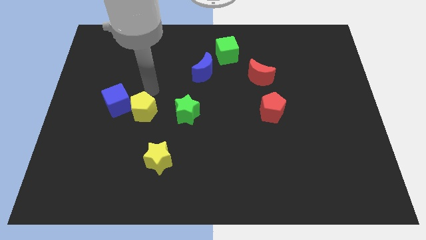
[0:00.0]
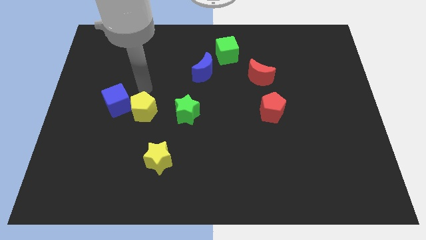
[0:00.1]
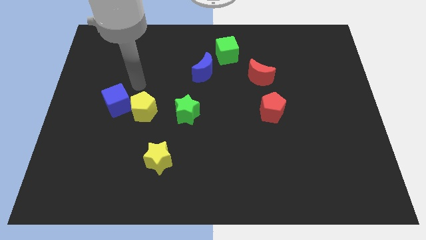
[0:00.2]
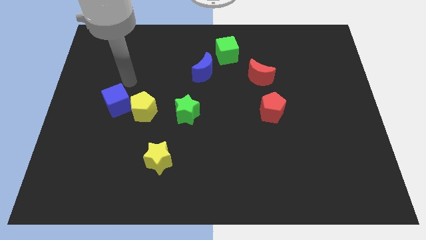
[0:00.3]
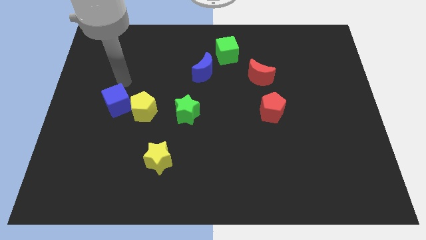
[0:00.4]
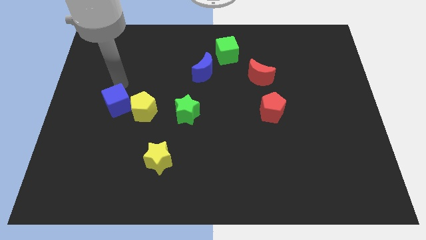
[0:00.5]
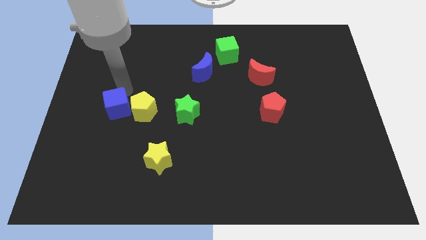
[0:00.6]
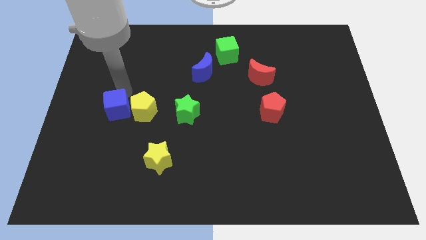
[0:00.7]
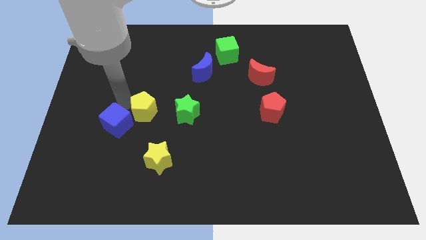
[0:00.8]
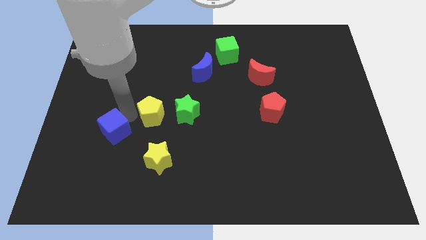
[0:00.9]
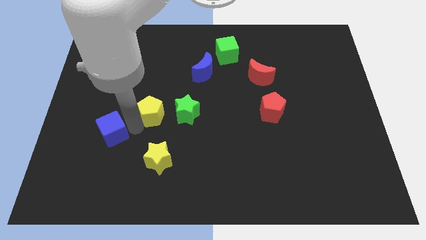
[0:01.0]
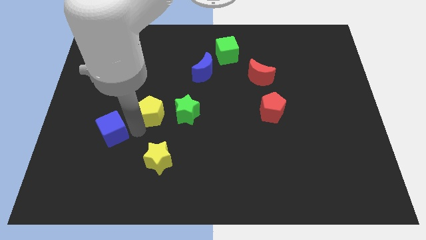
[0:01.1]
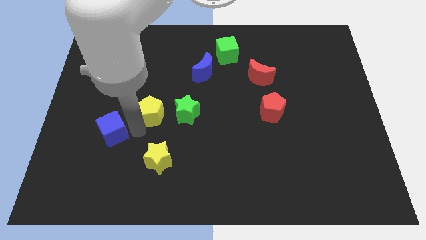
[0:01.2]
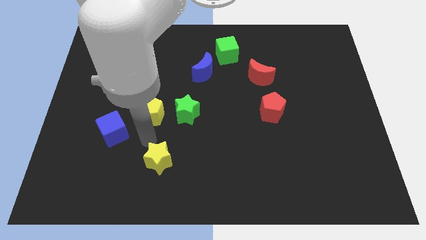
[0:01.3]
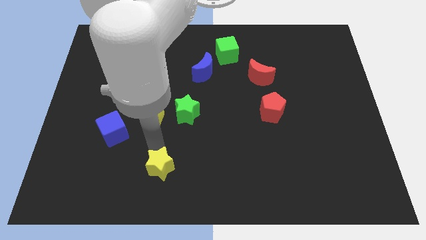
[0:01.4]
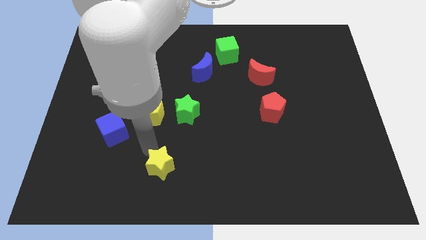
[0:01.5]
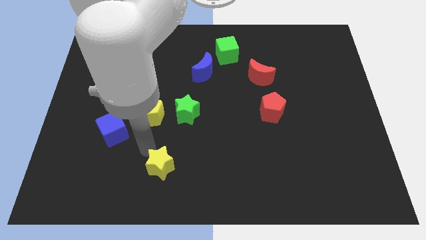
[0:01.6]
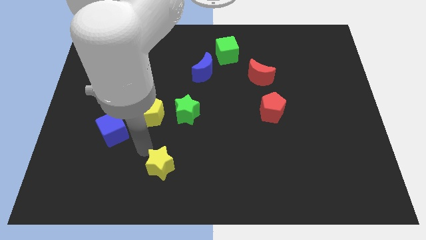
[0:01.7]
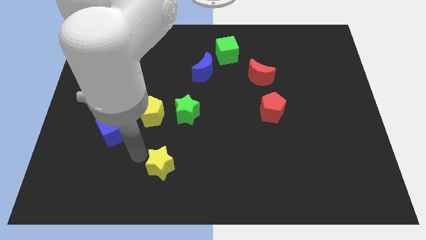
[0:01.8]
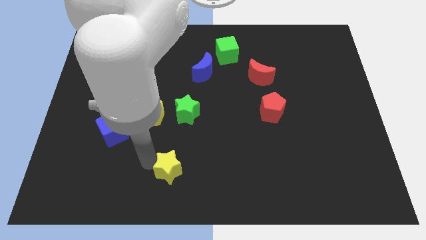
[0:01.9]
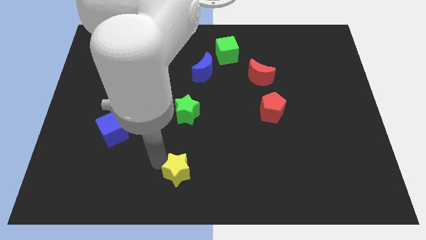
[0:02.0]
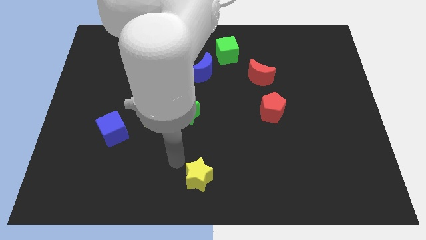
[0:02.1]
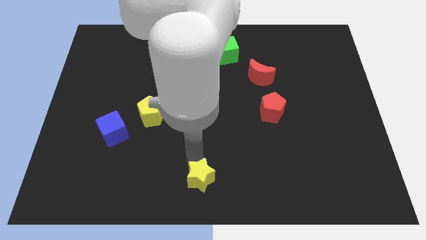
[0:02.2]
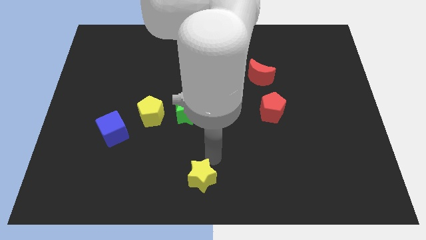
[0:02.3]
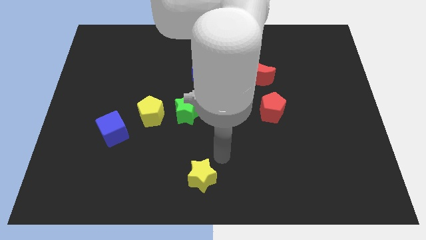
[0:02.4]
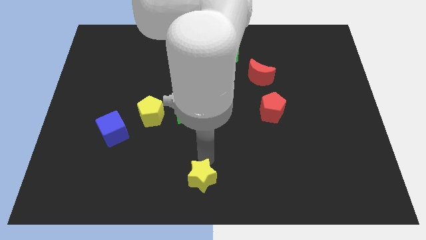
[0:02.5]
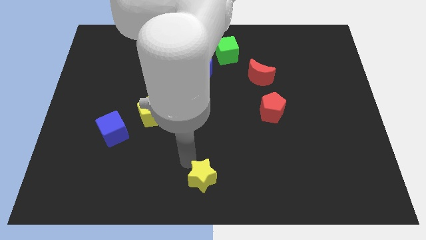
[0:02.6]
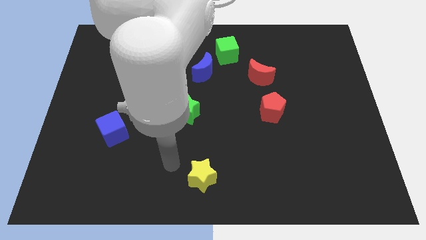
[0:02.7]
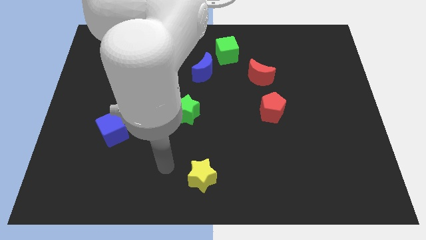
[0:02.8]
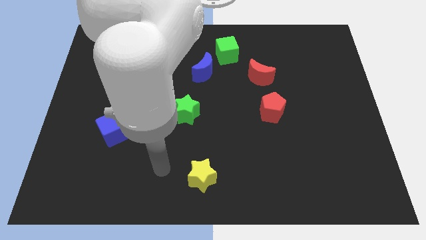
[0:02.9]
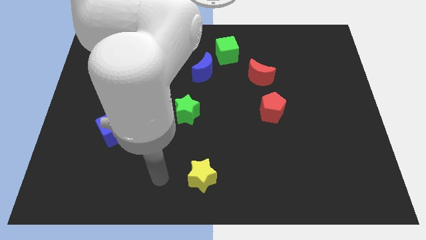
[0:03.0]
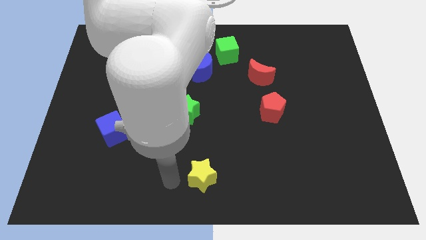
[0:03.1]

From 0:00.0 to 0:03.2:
place yellow star to the vertical bottom of green star

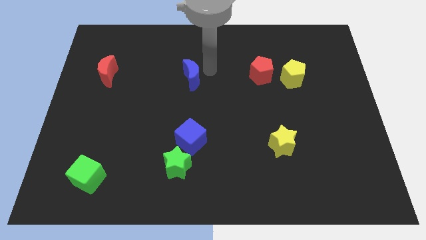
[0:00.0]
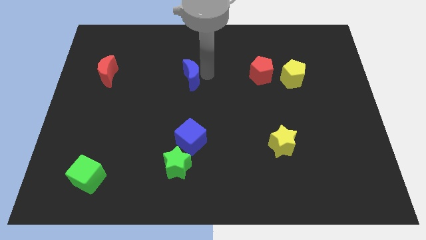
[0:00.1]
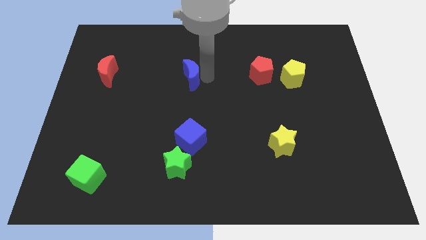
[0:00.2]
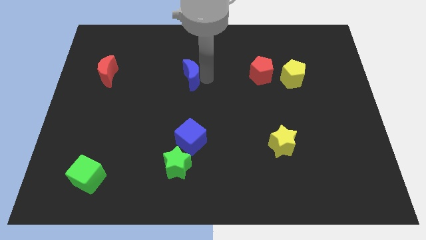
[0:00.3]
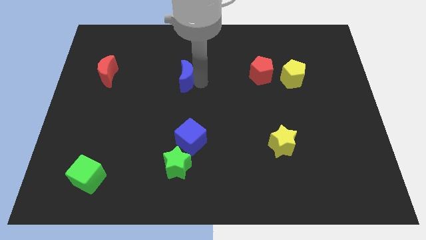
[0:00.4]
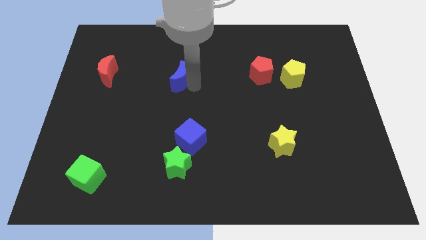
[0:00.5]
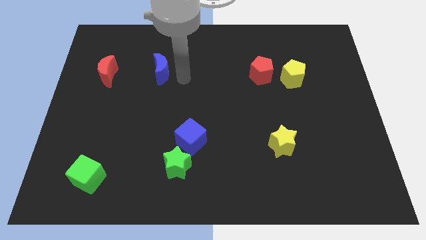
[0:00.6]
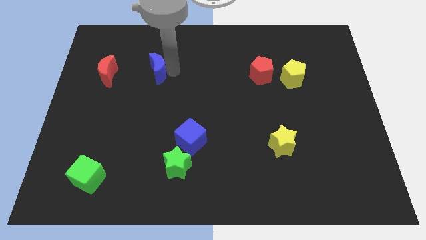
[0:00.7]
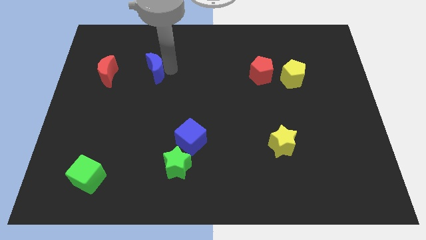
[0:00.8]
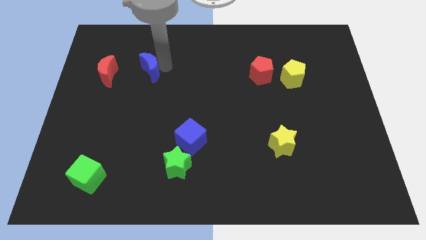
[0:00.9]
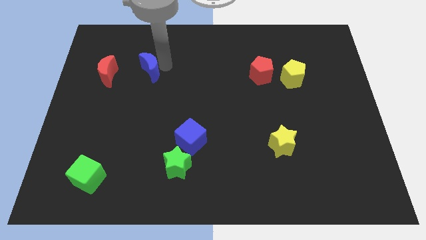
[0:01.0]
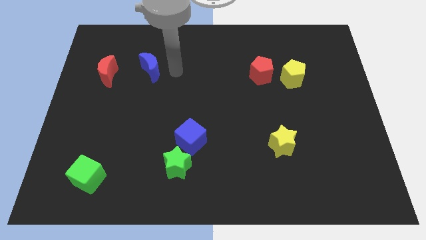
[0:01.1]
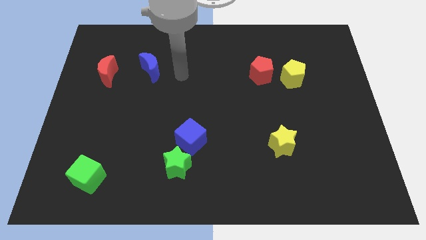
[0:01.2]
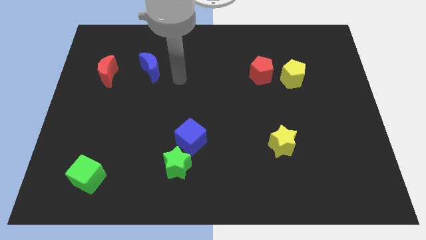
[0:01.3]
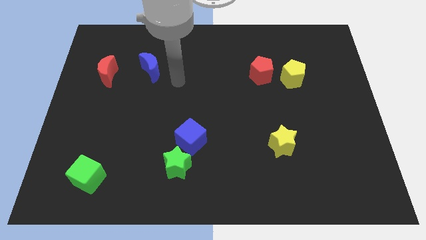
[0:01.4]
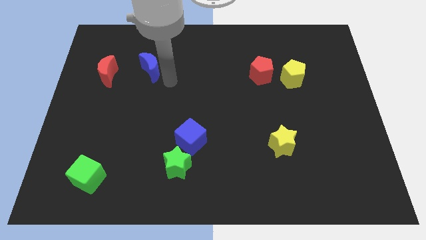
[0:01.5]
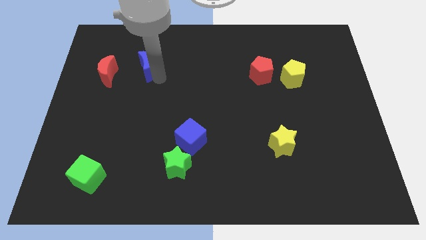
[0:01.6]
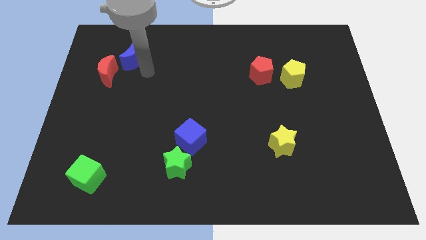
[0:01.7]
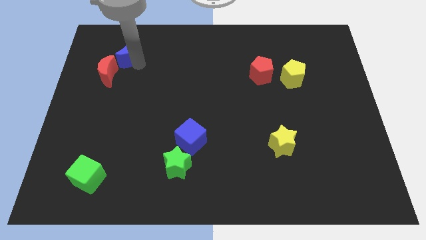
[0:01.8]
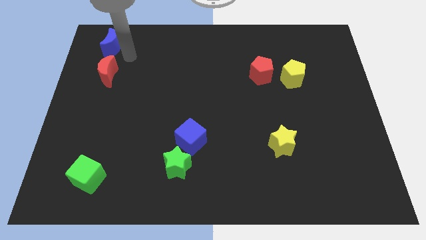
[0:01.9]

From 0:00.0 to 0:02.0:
push the blue moon above red moon

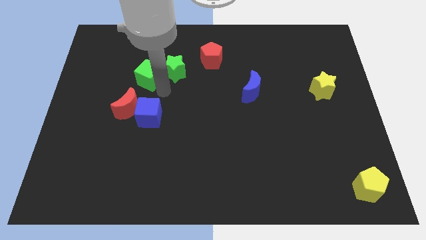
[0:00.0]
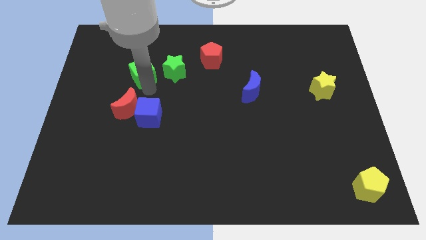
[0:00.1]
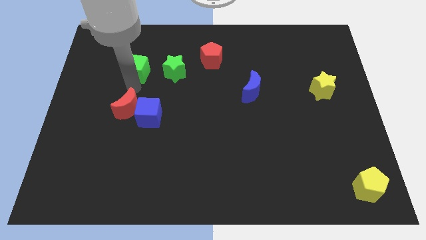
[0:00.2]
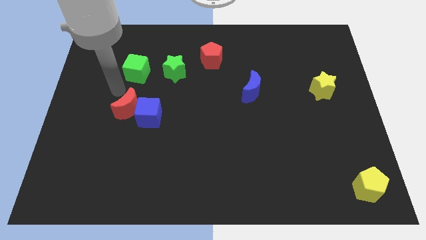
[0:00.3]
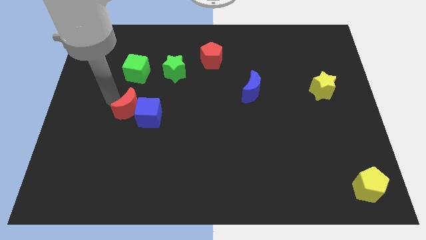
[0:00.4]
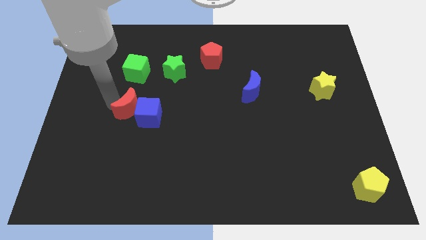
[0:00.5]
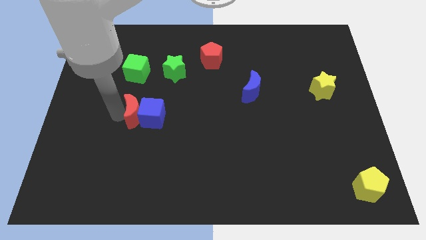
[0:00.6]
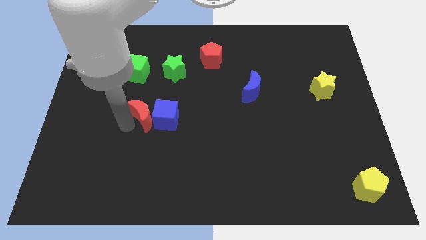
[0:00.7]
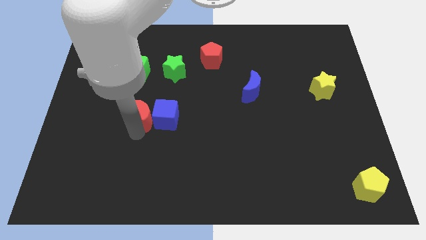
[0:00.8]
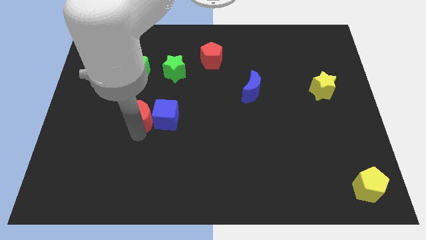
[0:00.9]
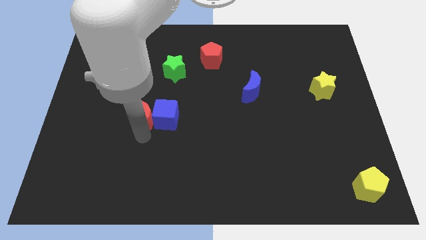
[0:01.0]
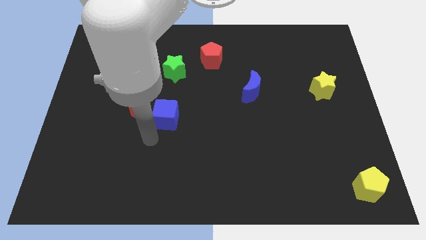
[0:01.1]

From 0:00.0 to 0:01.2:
push the red moon and blue cube towards the center

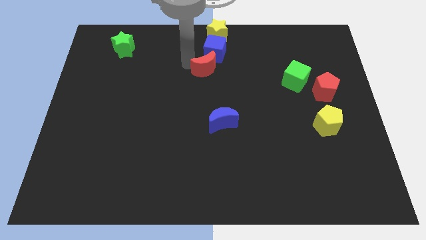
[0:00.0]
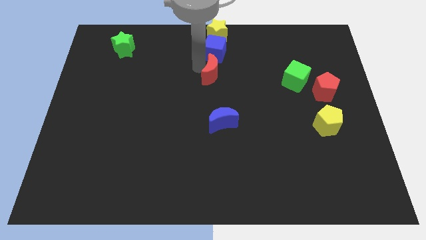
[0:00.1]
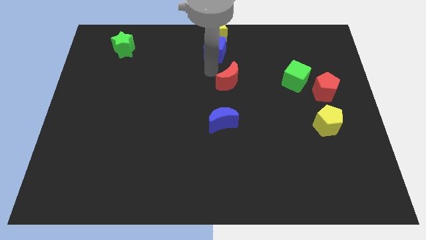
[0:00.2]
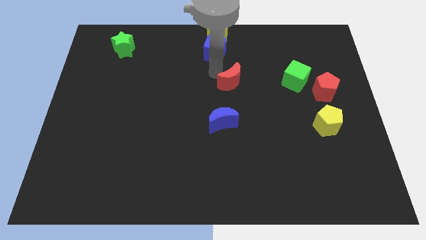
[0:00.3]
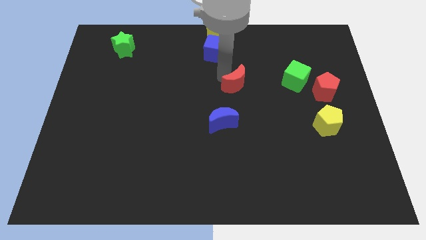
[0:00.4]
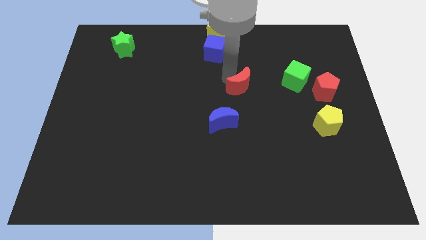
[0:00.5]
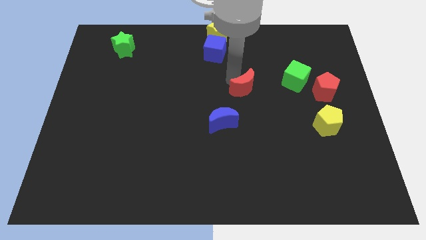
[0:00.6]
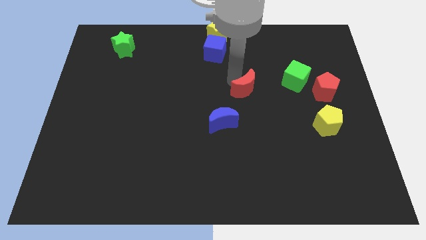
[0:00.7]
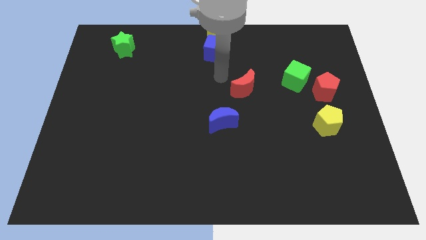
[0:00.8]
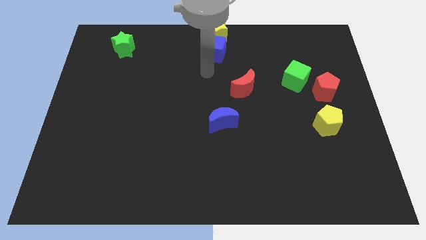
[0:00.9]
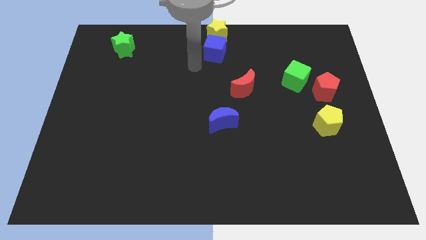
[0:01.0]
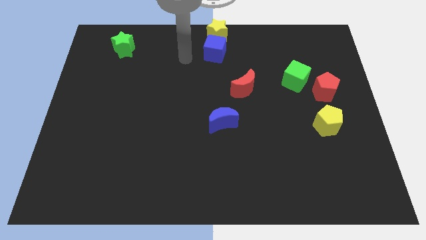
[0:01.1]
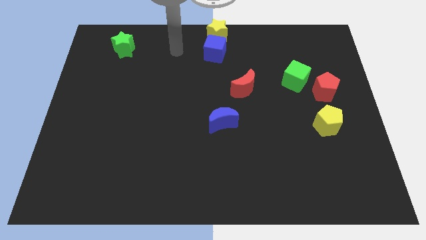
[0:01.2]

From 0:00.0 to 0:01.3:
place the red crescent left to the green cube

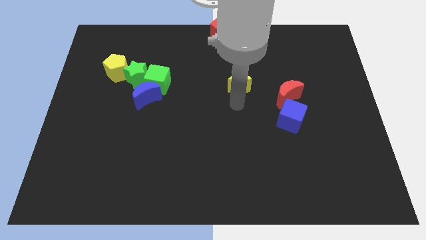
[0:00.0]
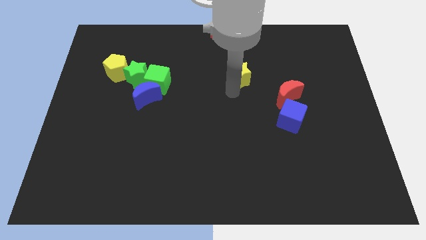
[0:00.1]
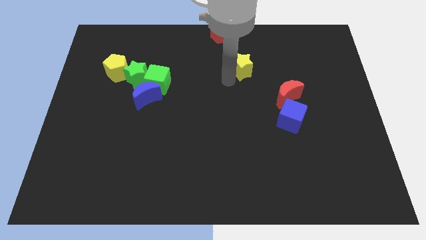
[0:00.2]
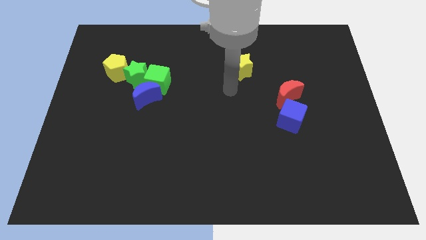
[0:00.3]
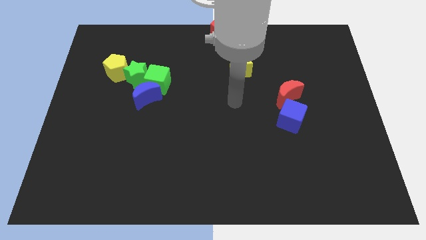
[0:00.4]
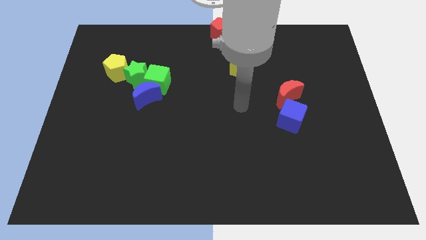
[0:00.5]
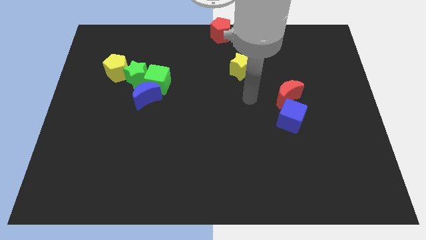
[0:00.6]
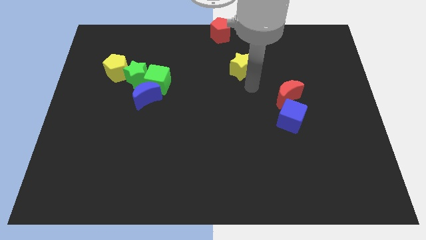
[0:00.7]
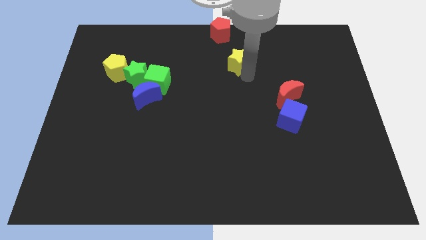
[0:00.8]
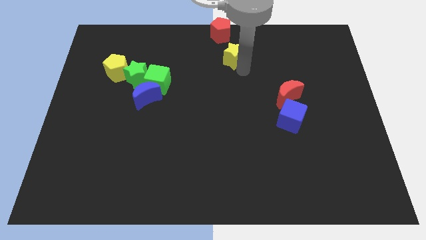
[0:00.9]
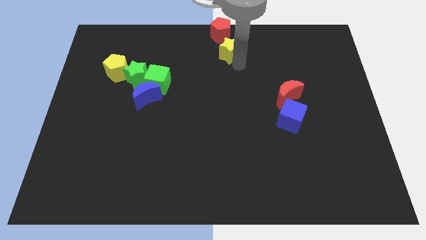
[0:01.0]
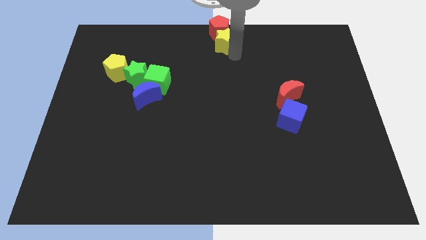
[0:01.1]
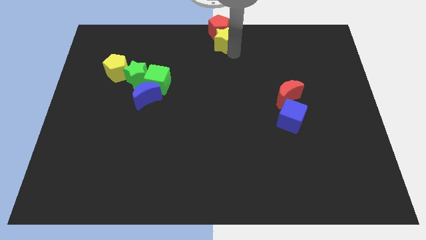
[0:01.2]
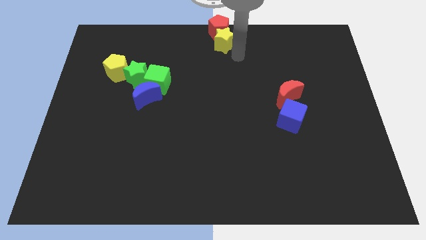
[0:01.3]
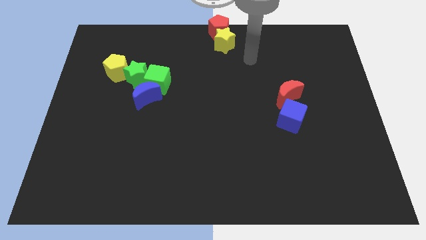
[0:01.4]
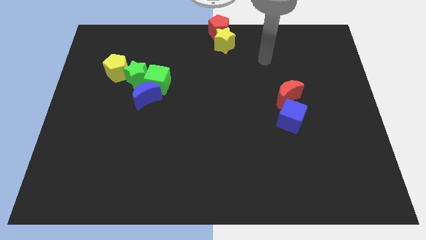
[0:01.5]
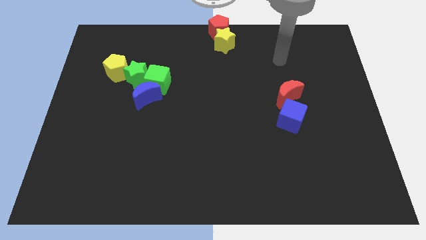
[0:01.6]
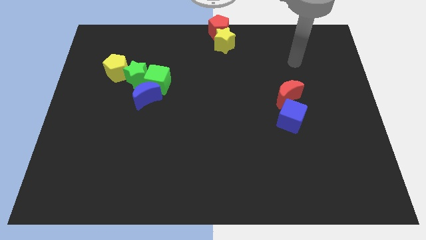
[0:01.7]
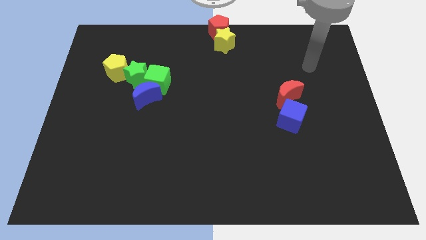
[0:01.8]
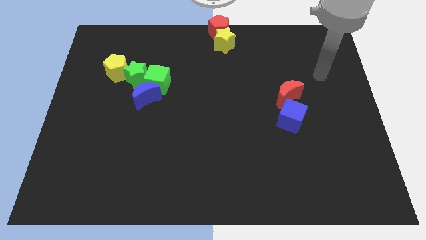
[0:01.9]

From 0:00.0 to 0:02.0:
push the yellow star into the red pentagon
